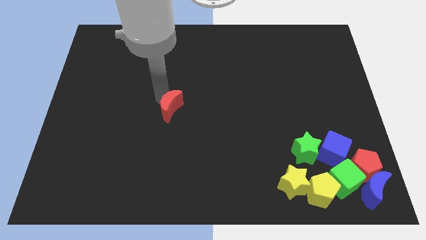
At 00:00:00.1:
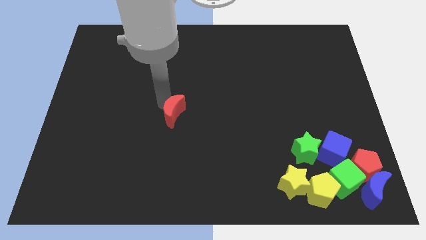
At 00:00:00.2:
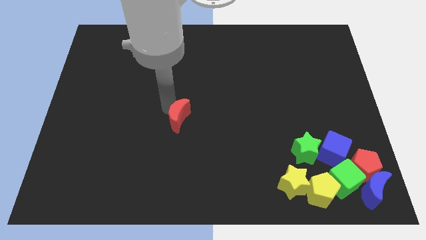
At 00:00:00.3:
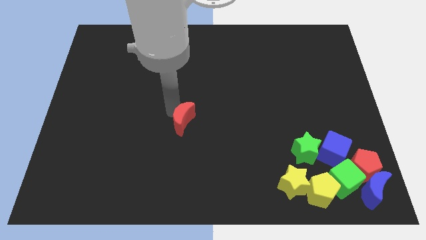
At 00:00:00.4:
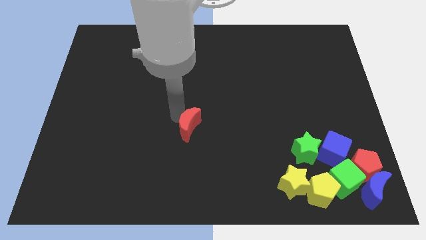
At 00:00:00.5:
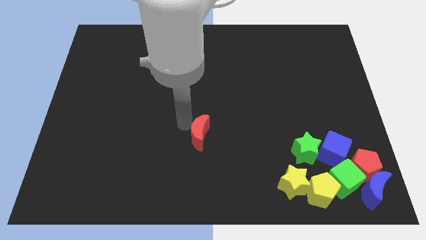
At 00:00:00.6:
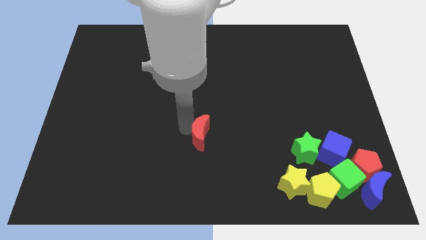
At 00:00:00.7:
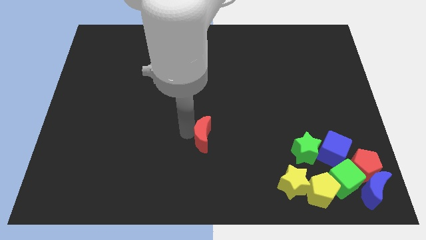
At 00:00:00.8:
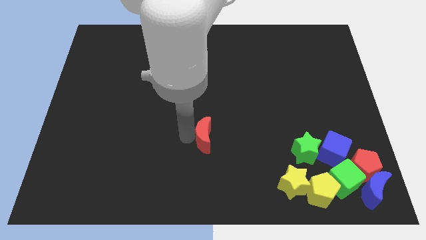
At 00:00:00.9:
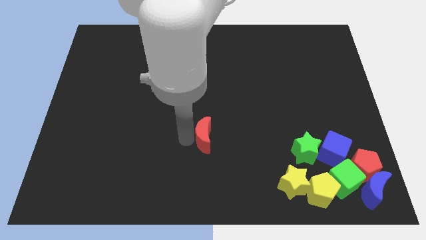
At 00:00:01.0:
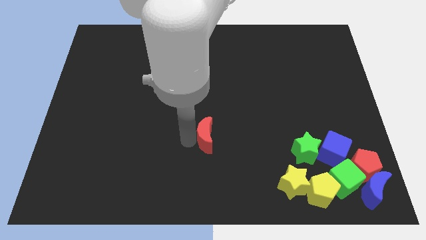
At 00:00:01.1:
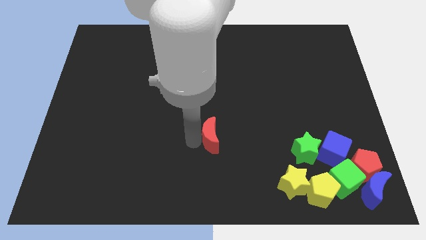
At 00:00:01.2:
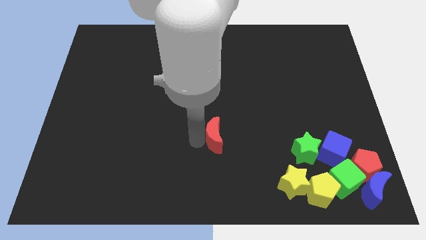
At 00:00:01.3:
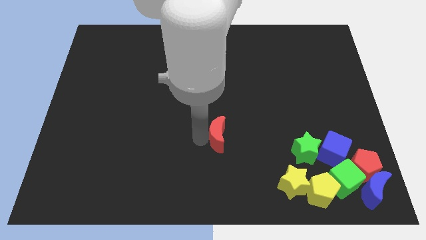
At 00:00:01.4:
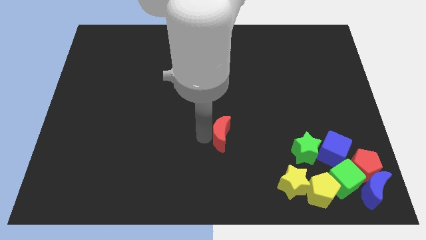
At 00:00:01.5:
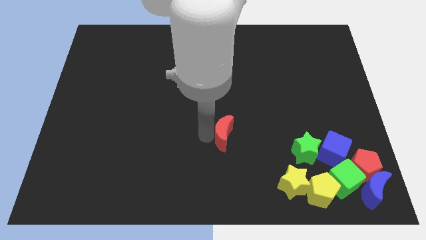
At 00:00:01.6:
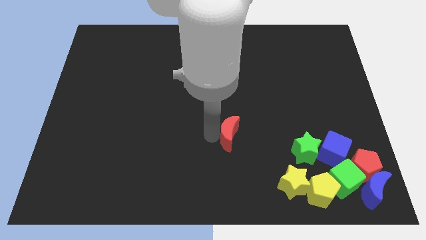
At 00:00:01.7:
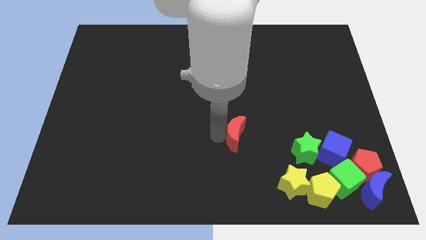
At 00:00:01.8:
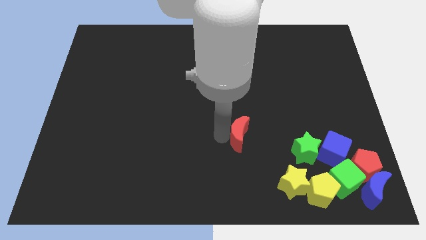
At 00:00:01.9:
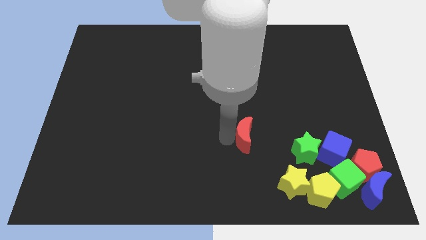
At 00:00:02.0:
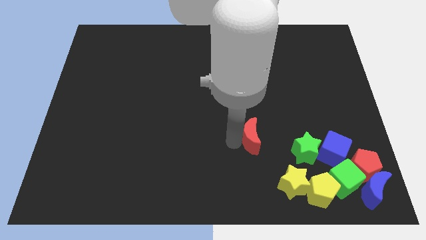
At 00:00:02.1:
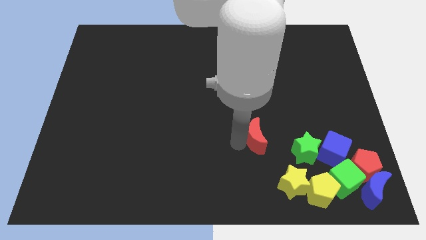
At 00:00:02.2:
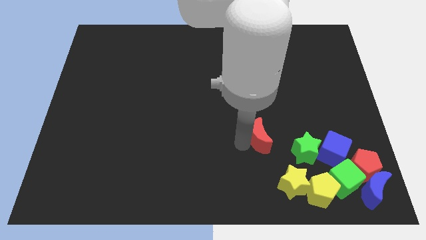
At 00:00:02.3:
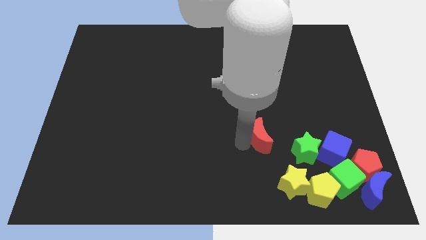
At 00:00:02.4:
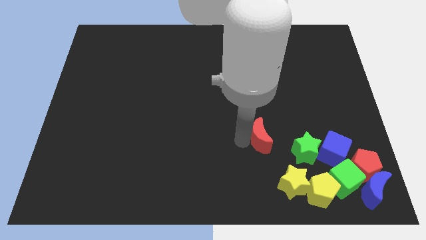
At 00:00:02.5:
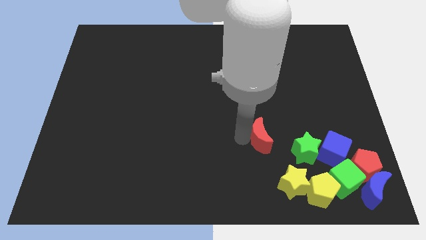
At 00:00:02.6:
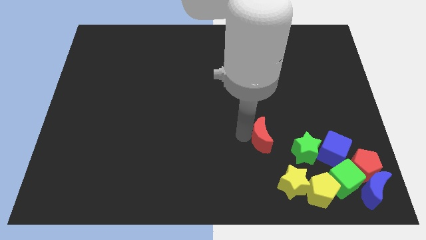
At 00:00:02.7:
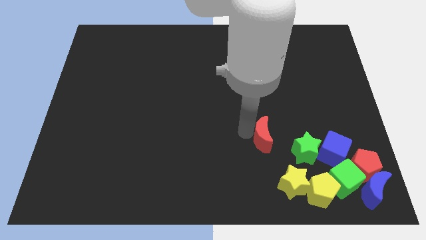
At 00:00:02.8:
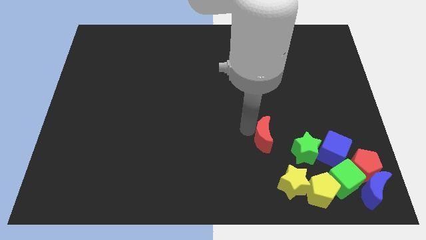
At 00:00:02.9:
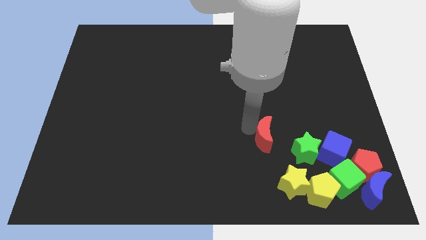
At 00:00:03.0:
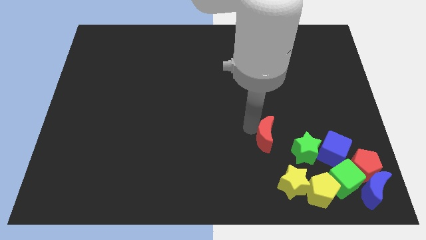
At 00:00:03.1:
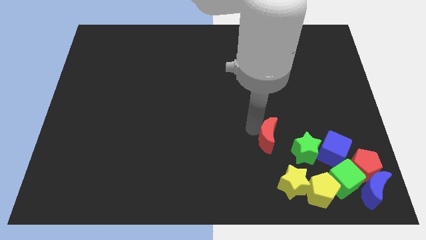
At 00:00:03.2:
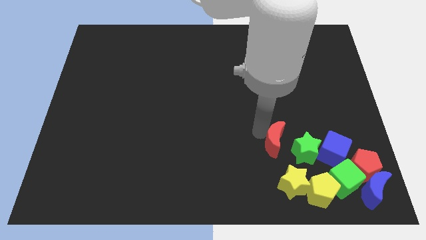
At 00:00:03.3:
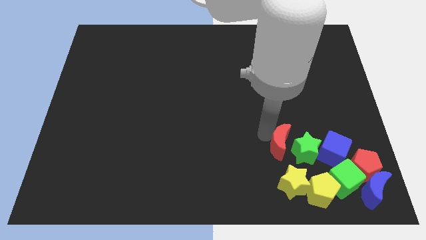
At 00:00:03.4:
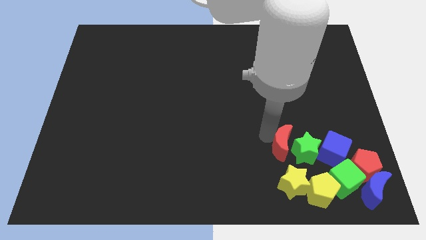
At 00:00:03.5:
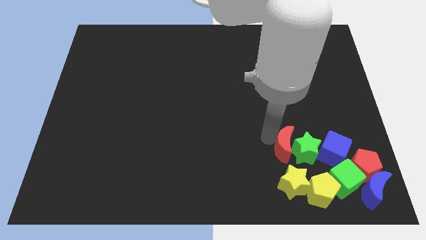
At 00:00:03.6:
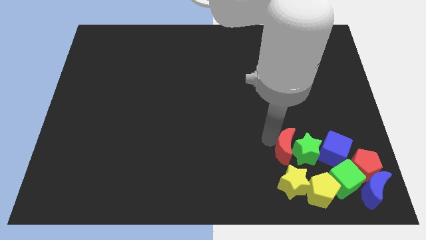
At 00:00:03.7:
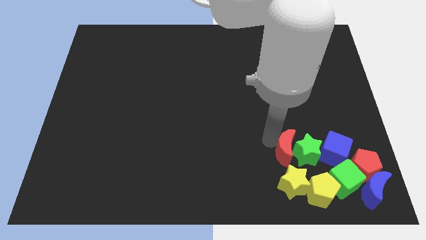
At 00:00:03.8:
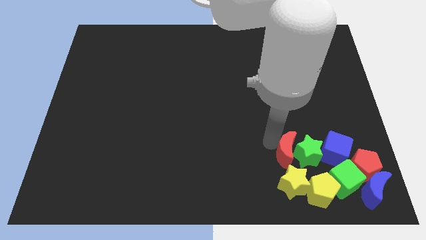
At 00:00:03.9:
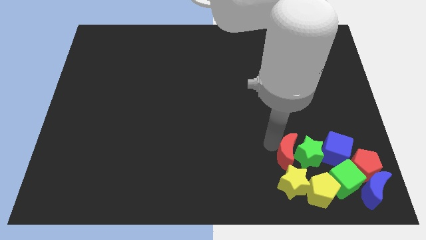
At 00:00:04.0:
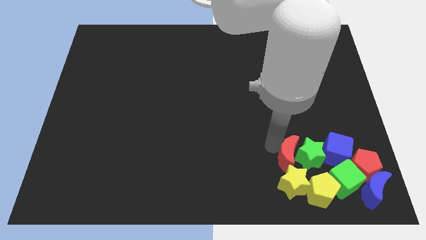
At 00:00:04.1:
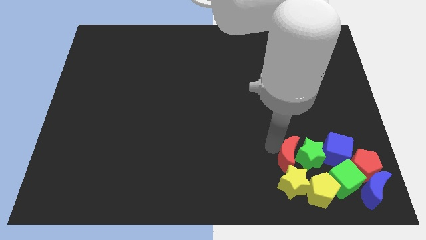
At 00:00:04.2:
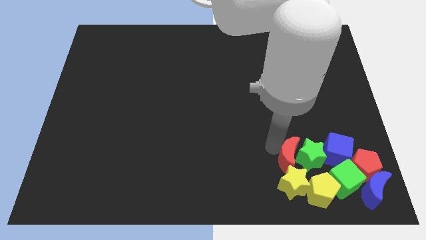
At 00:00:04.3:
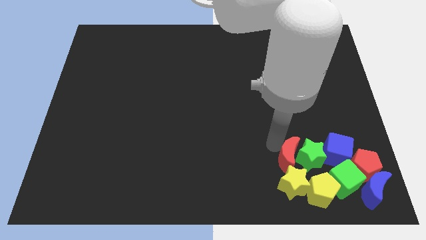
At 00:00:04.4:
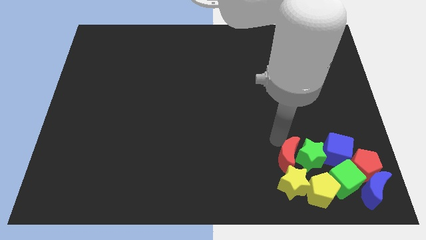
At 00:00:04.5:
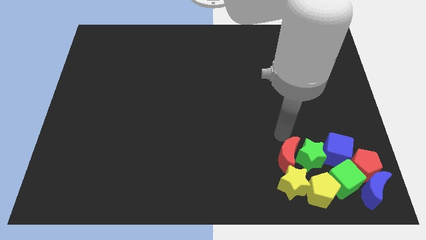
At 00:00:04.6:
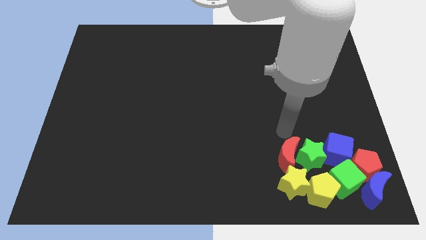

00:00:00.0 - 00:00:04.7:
move the red moon towards the top side of the yellow star

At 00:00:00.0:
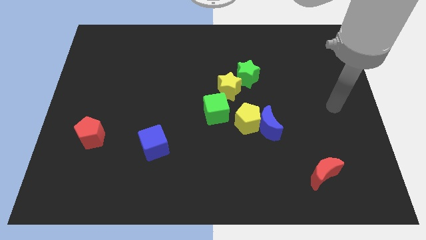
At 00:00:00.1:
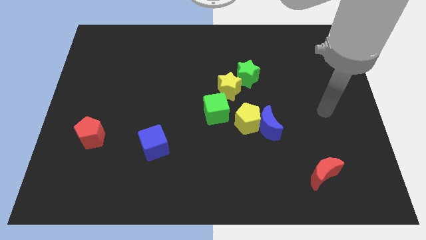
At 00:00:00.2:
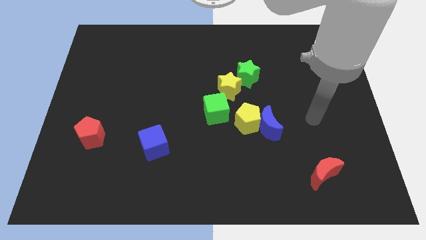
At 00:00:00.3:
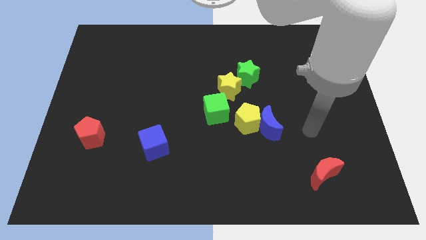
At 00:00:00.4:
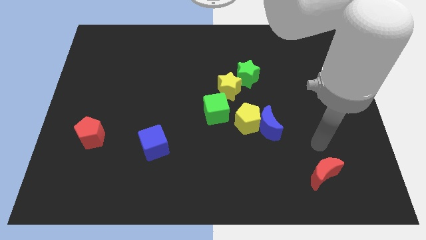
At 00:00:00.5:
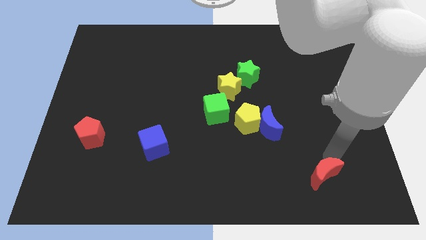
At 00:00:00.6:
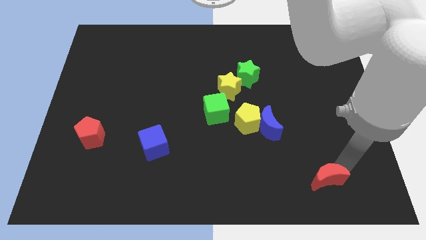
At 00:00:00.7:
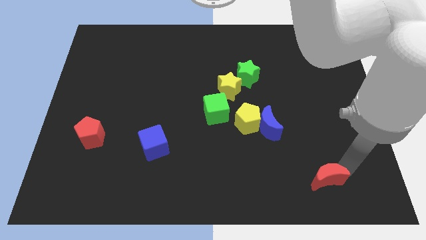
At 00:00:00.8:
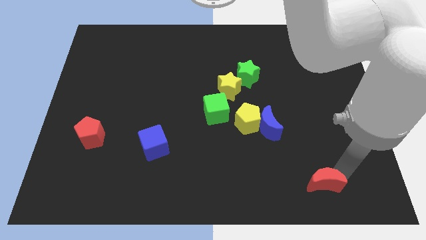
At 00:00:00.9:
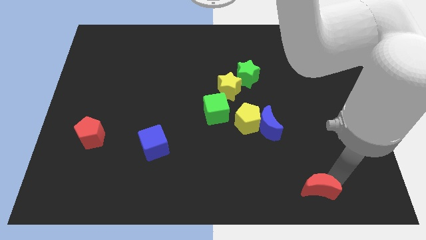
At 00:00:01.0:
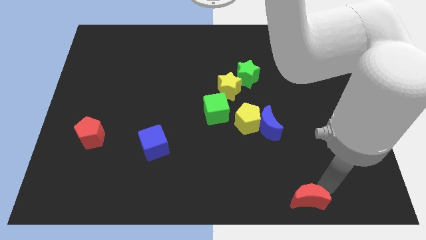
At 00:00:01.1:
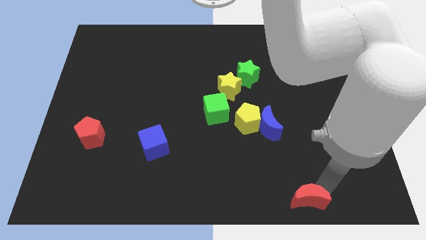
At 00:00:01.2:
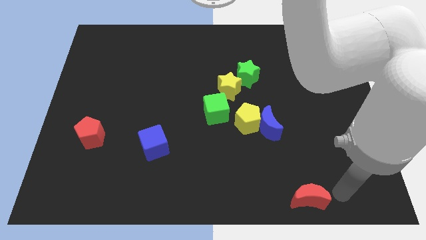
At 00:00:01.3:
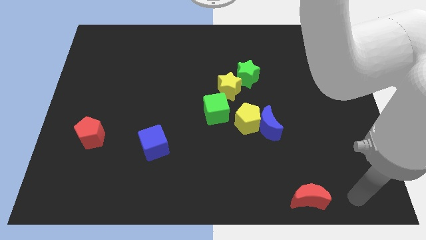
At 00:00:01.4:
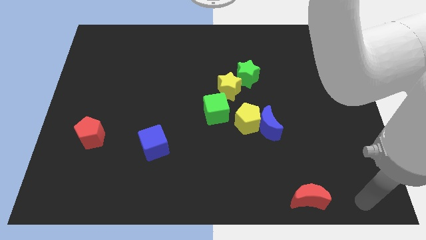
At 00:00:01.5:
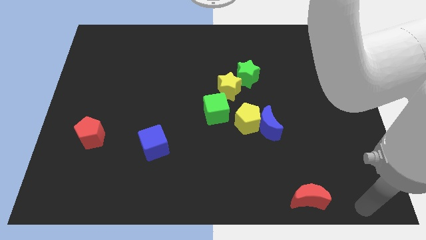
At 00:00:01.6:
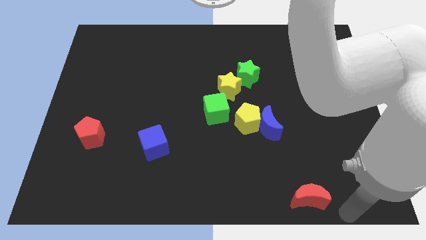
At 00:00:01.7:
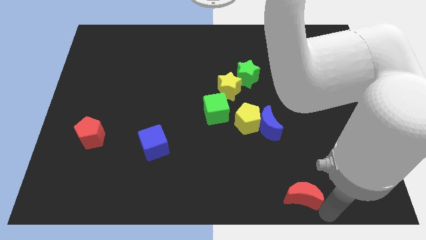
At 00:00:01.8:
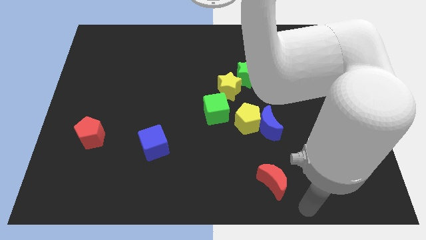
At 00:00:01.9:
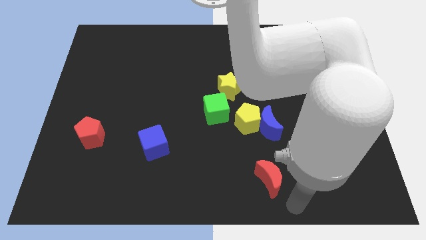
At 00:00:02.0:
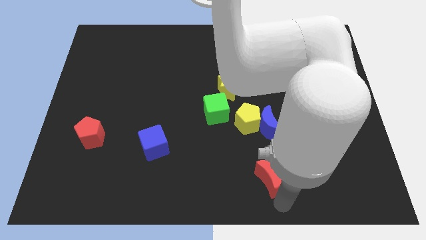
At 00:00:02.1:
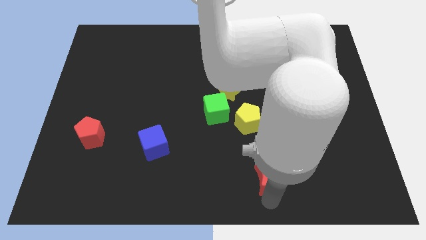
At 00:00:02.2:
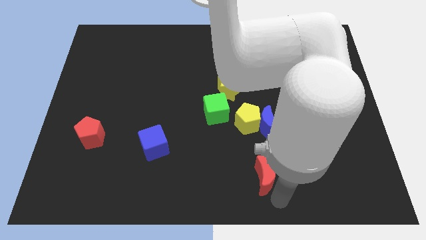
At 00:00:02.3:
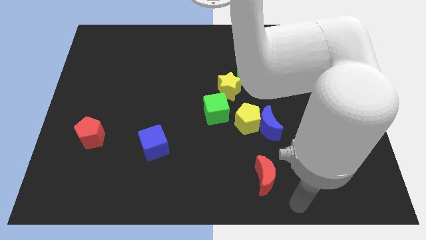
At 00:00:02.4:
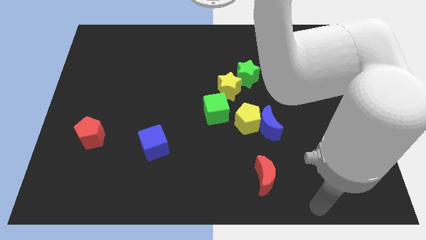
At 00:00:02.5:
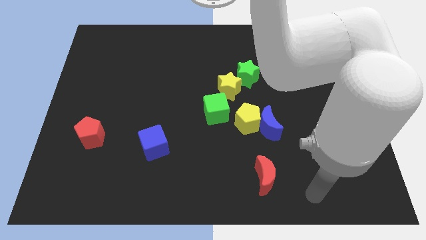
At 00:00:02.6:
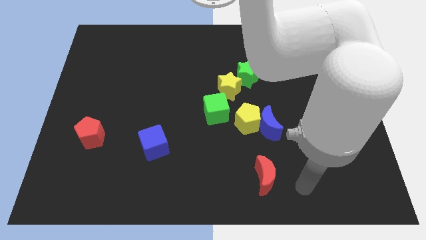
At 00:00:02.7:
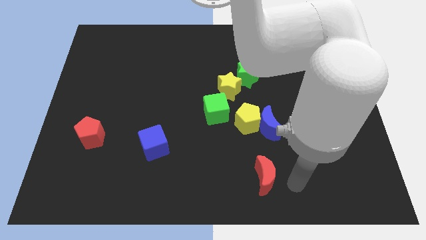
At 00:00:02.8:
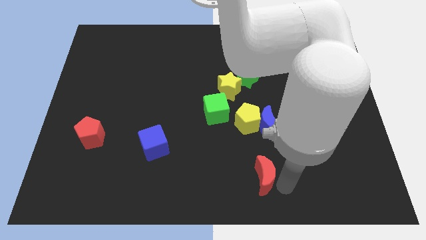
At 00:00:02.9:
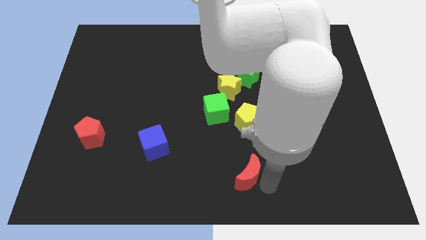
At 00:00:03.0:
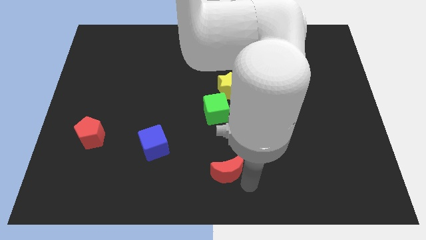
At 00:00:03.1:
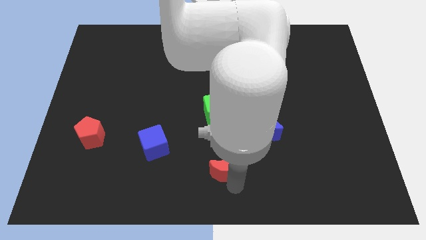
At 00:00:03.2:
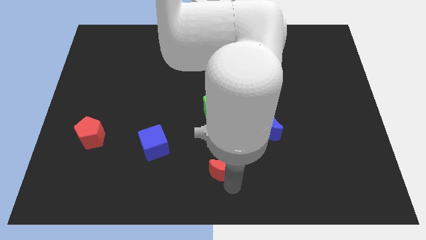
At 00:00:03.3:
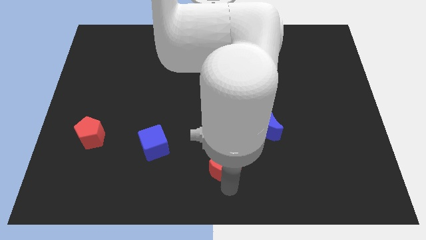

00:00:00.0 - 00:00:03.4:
push the red moon to the bottom side of the green cube

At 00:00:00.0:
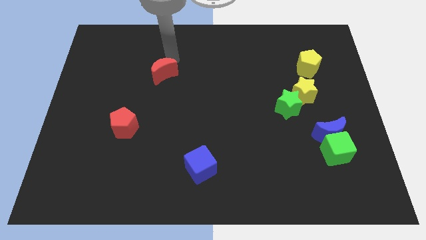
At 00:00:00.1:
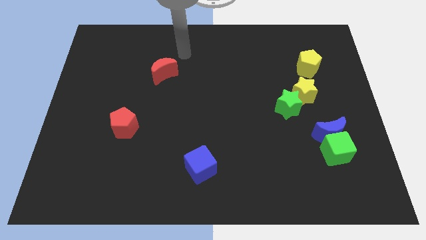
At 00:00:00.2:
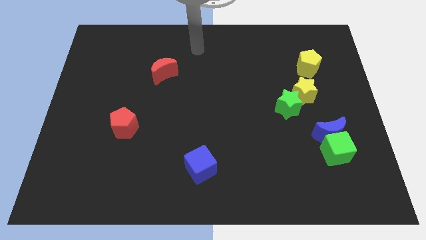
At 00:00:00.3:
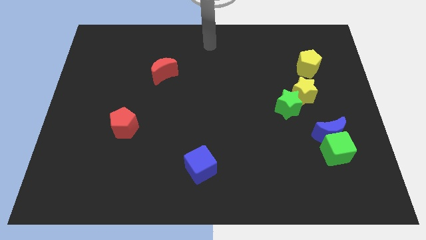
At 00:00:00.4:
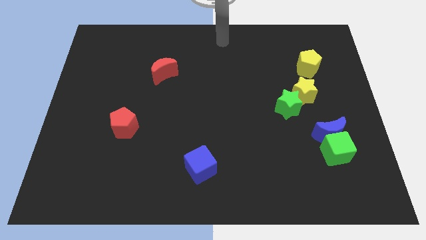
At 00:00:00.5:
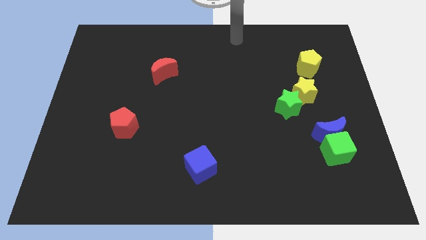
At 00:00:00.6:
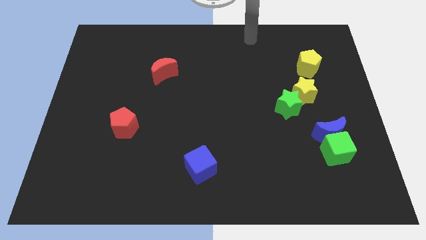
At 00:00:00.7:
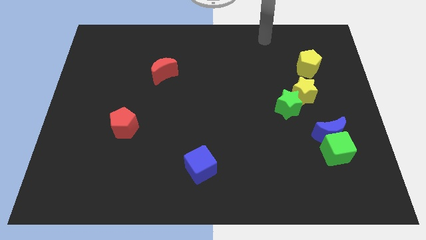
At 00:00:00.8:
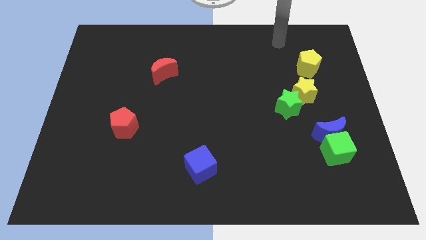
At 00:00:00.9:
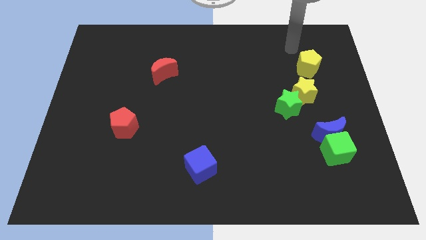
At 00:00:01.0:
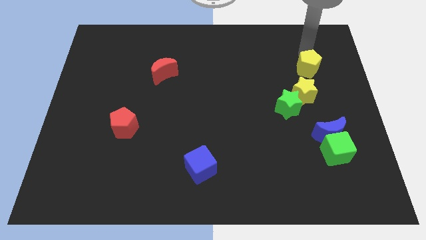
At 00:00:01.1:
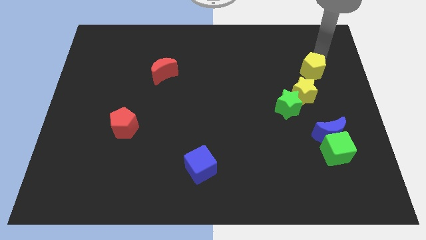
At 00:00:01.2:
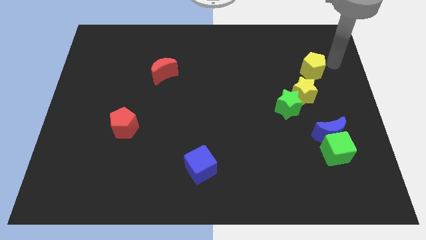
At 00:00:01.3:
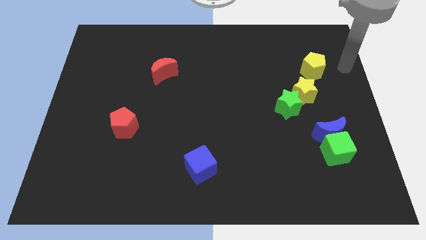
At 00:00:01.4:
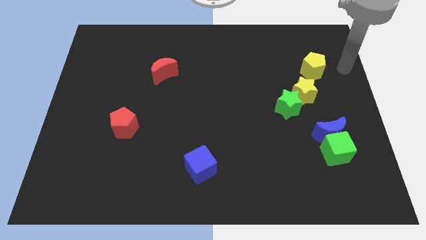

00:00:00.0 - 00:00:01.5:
move your arm away from the red moon
